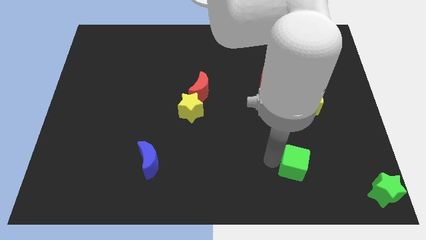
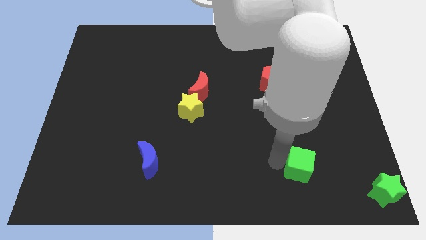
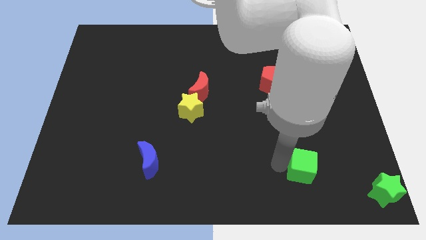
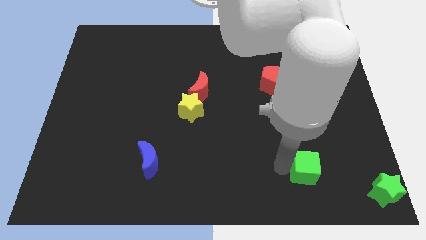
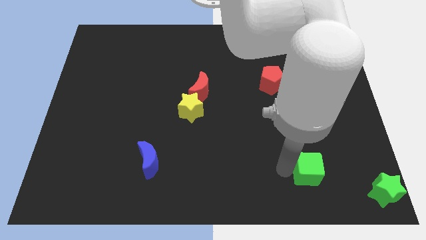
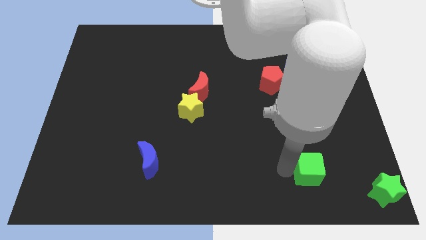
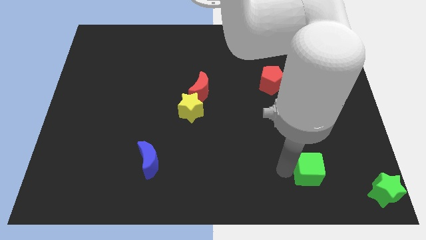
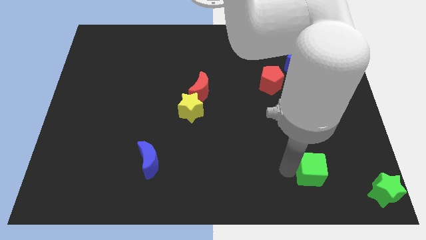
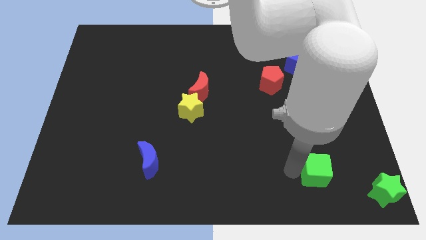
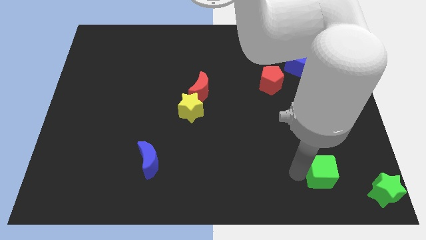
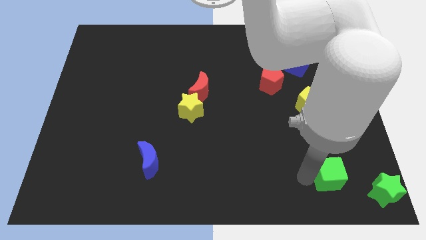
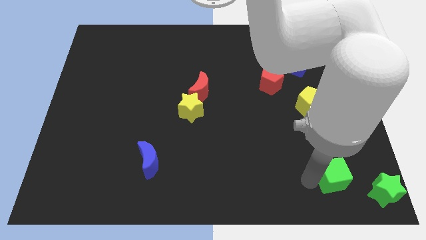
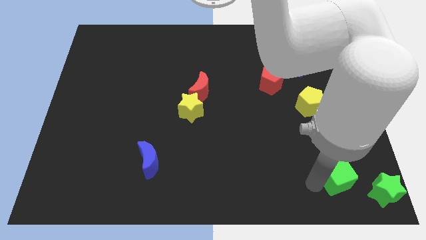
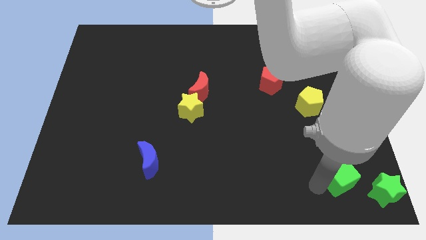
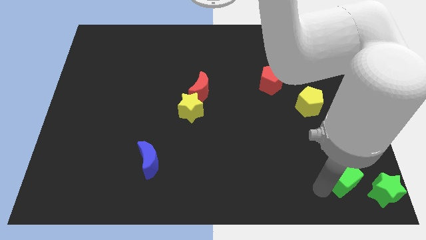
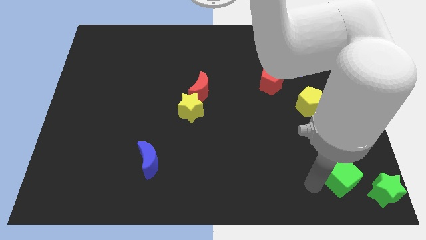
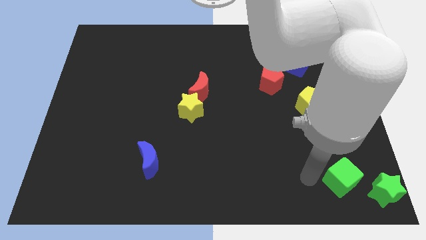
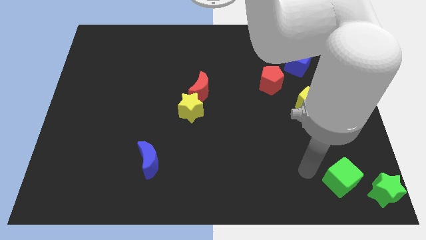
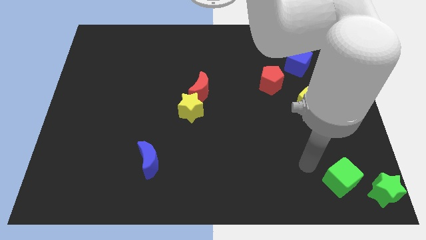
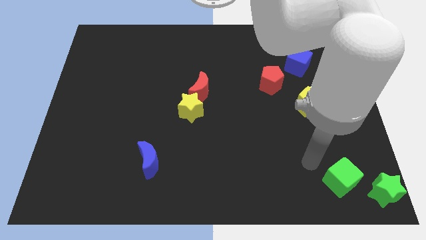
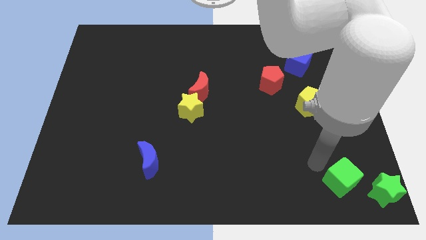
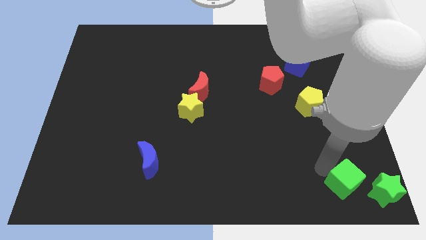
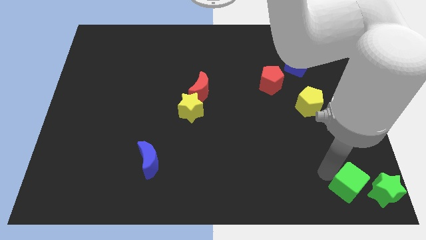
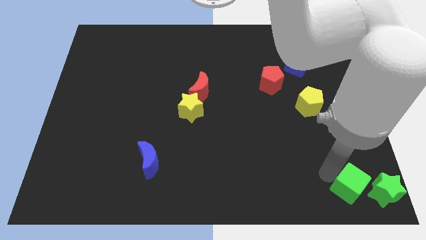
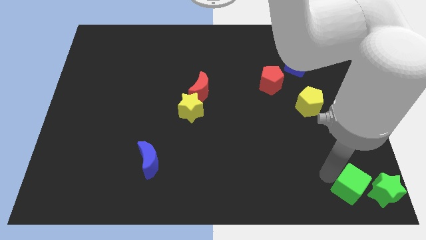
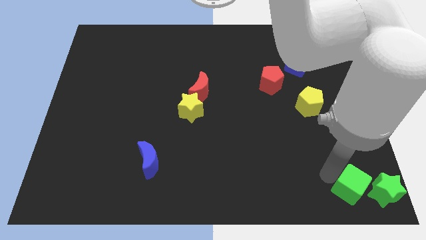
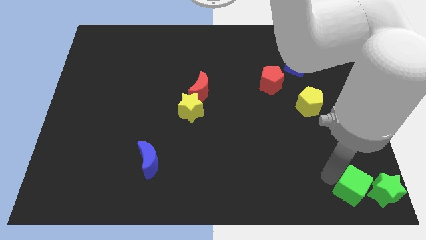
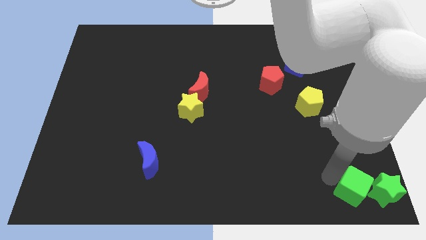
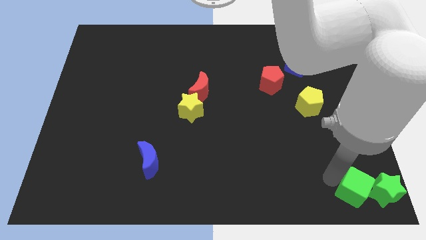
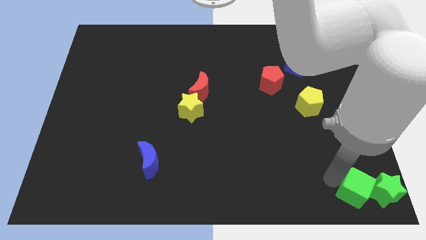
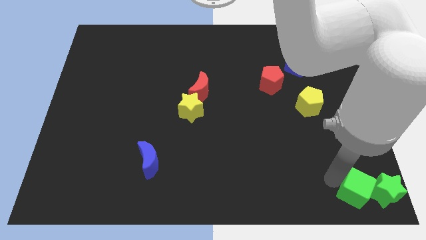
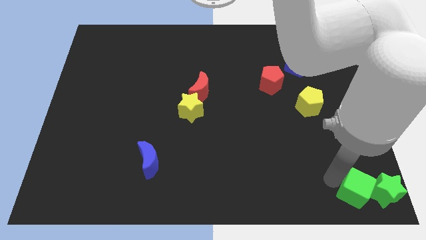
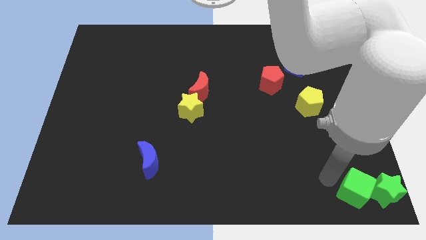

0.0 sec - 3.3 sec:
place the green cube close left to the green star

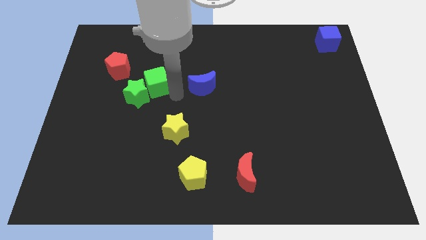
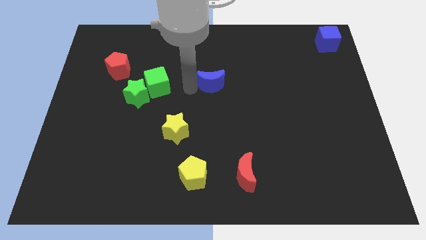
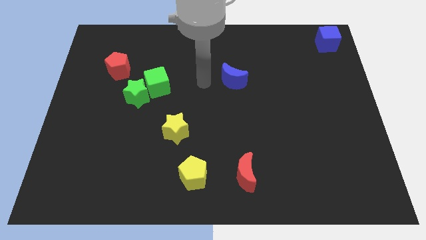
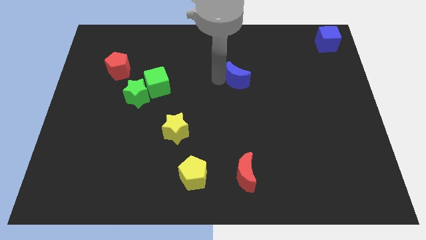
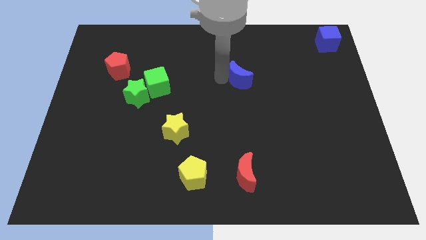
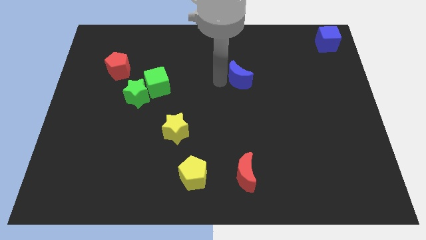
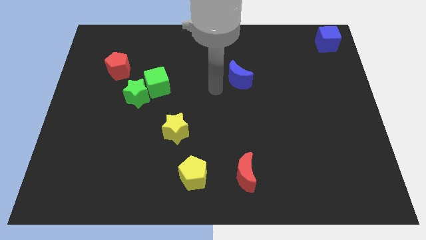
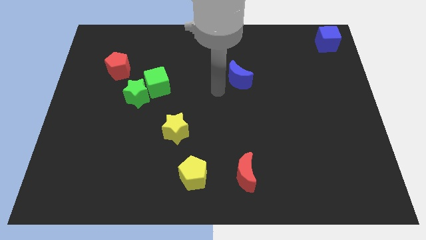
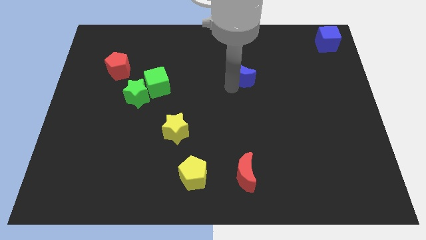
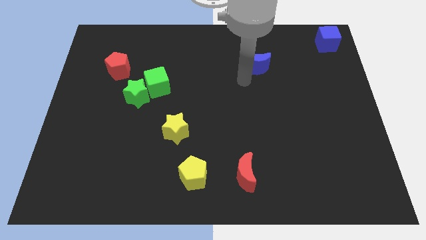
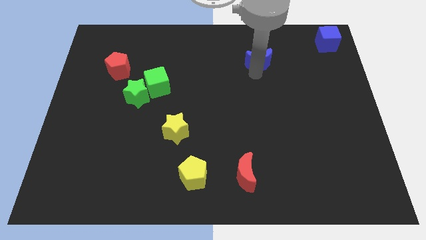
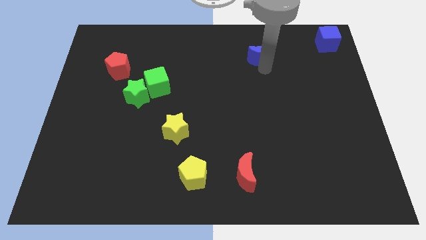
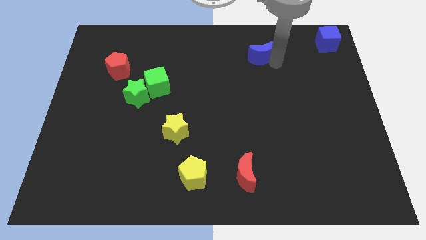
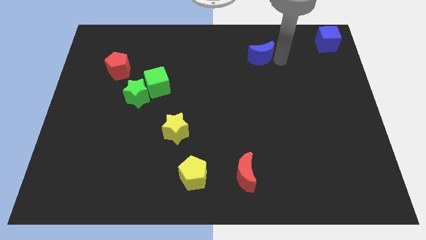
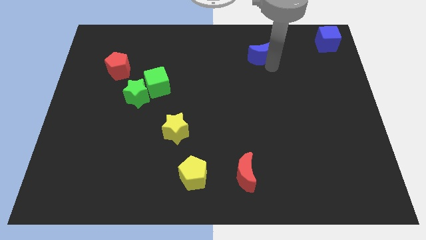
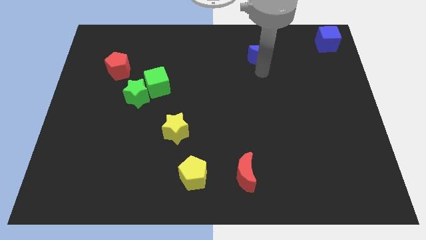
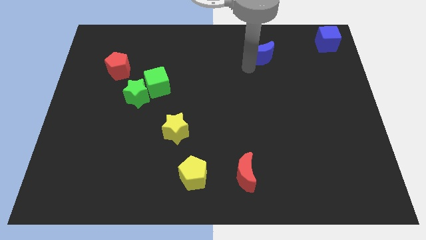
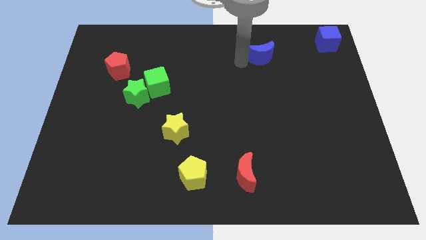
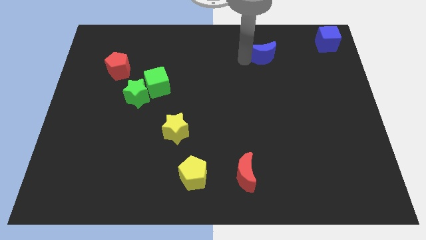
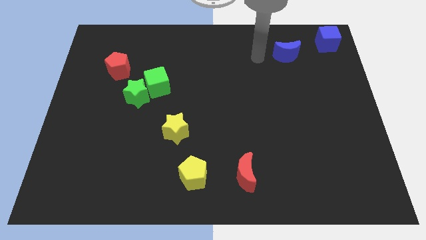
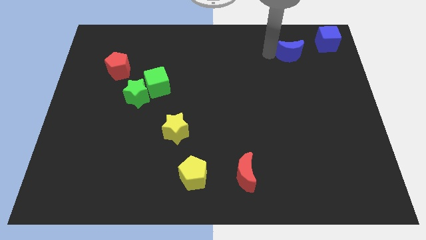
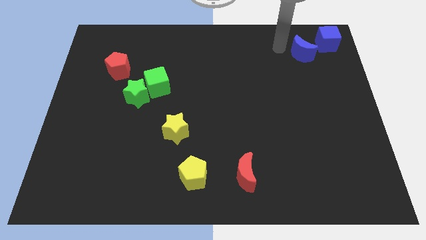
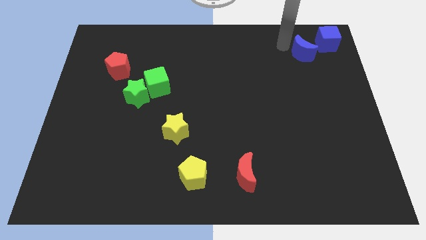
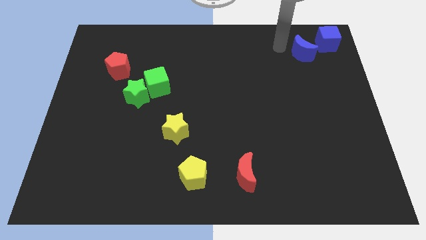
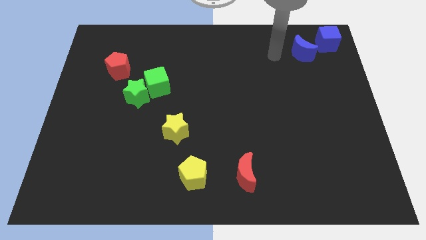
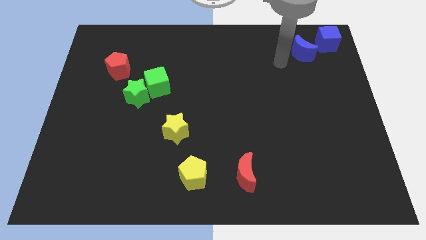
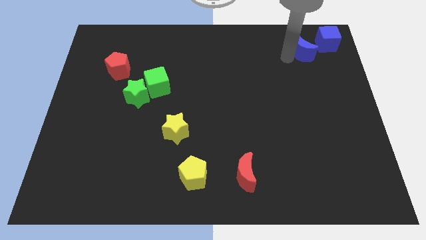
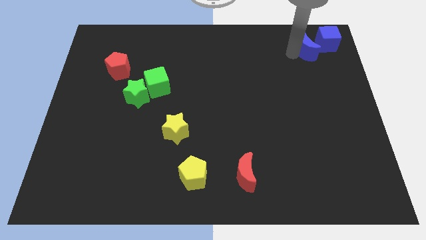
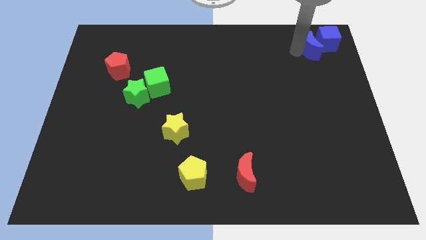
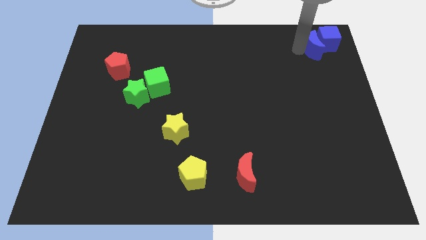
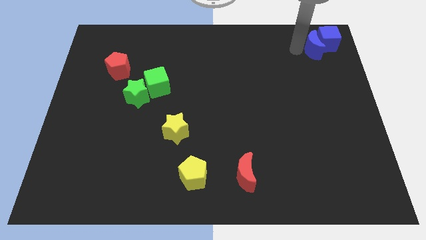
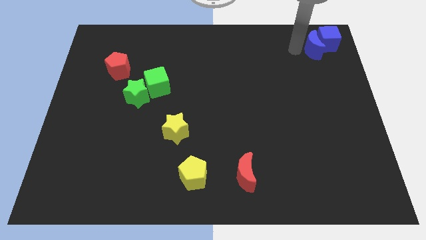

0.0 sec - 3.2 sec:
push the blue moon into the blue cube

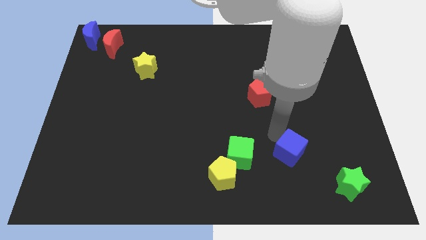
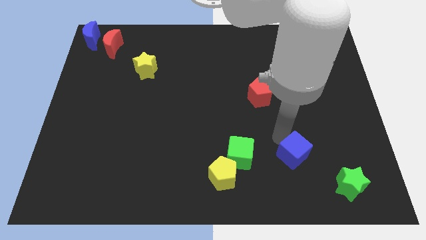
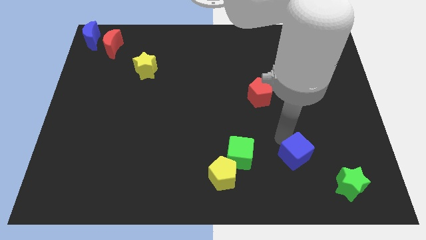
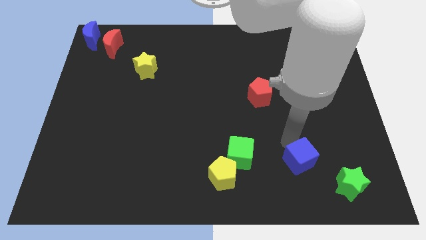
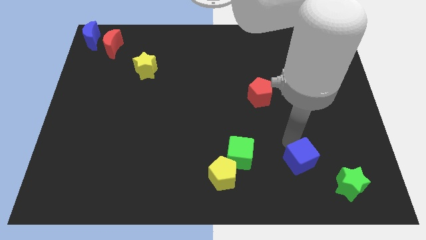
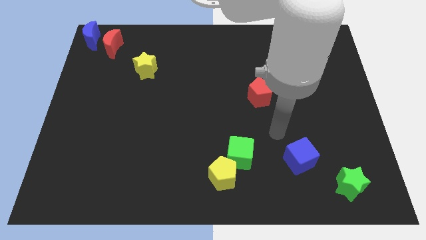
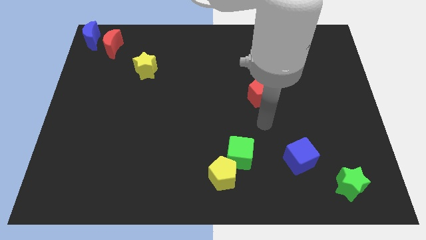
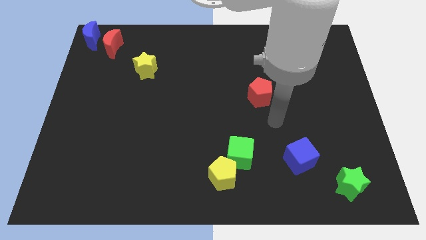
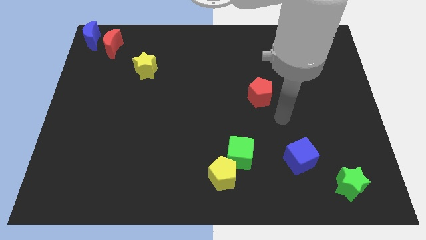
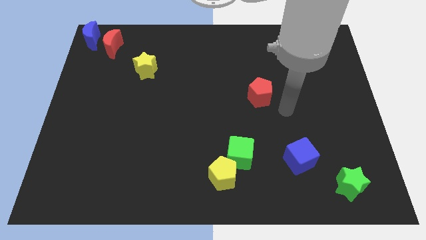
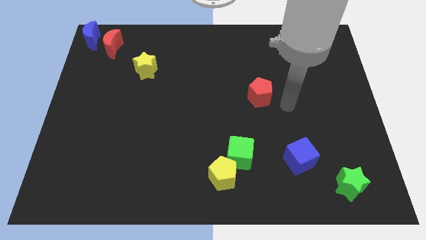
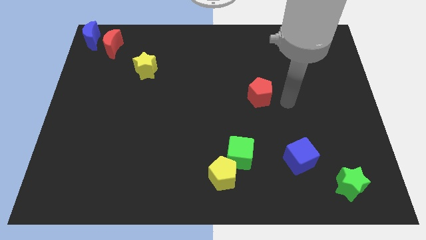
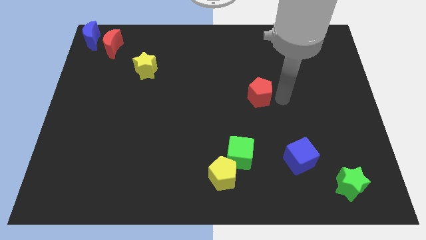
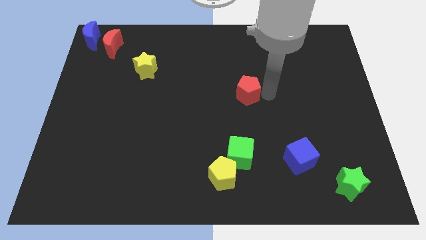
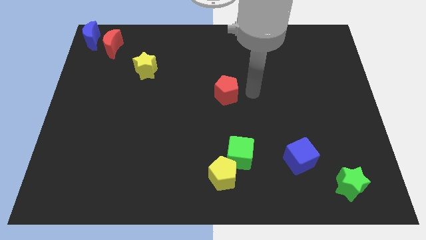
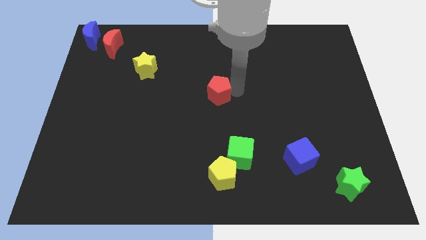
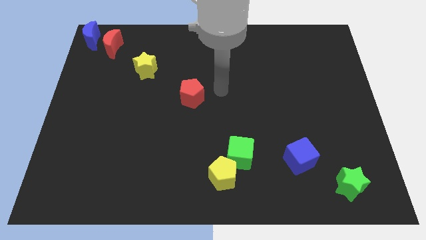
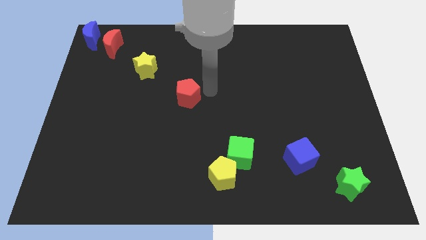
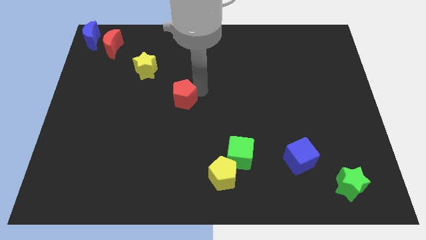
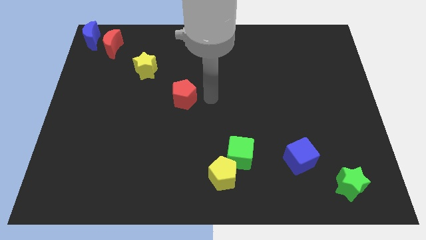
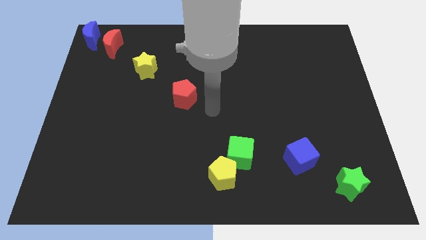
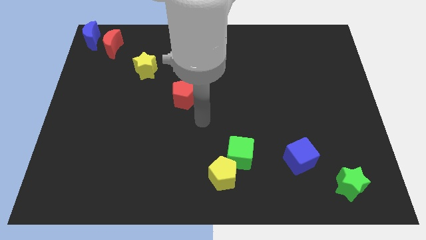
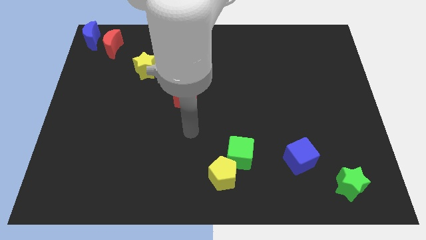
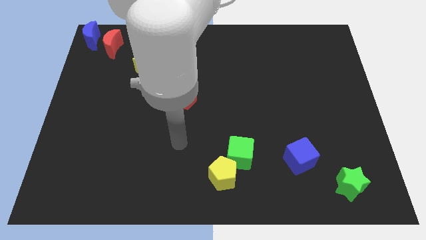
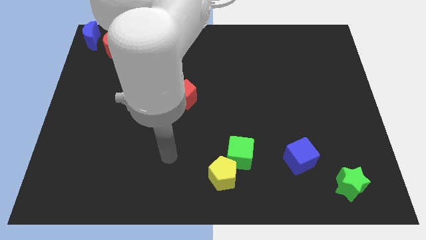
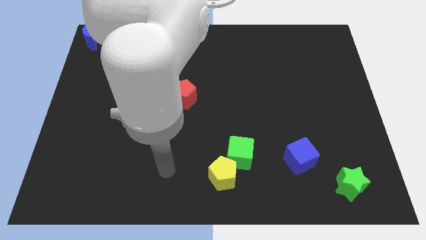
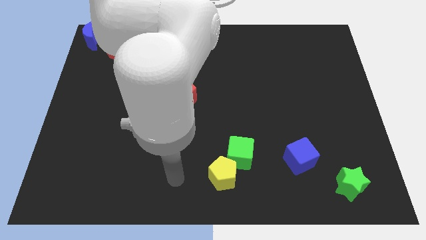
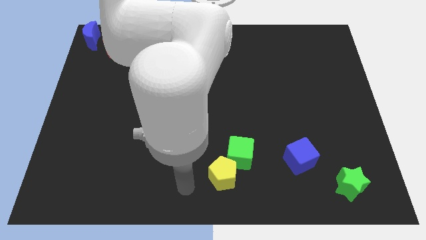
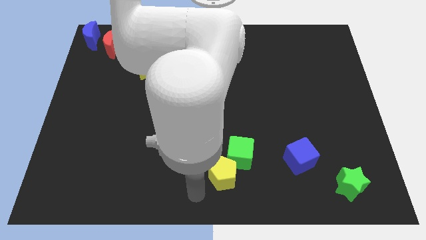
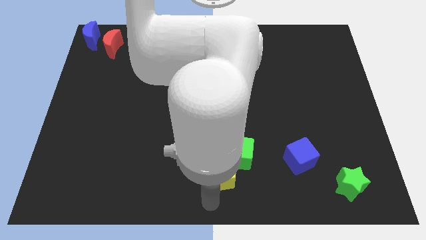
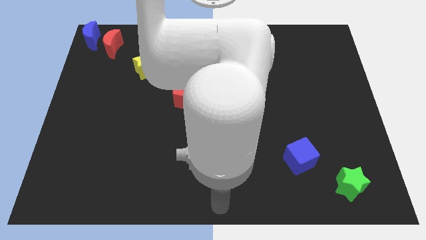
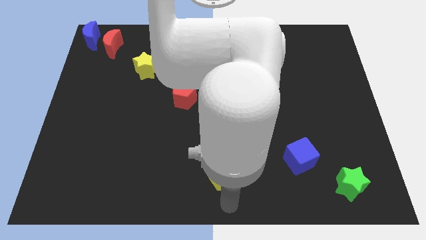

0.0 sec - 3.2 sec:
move red pentagon to the left
